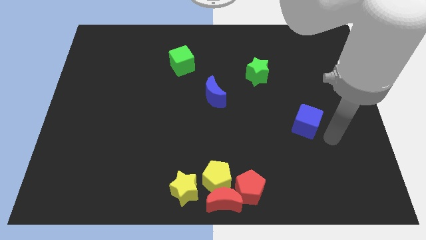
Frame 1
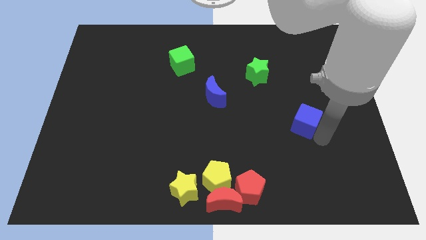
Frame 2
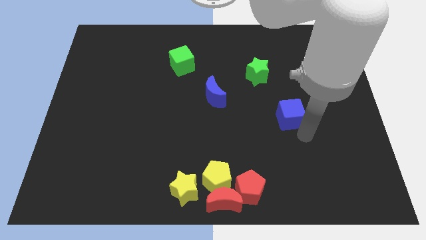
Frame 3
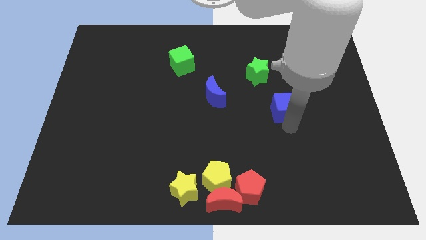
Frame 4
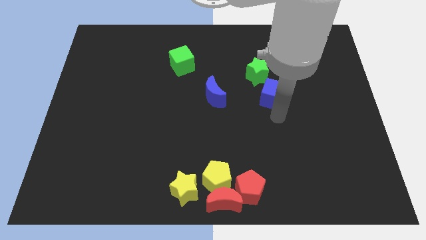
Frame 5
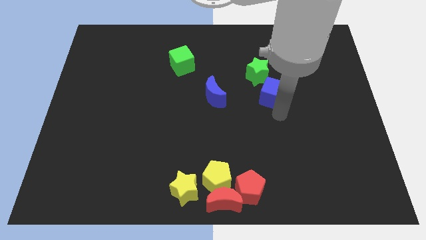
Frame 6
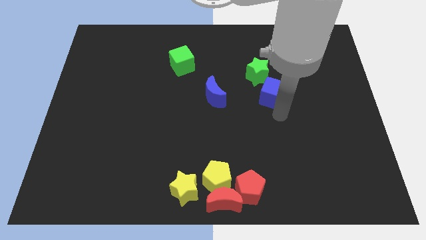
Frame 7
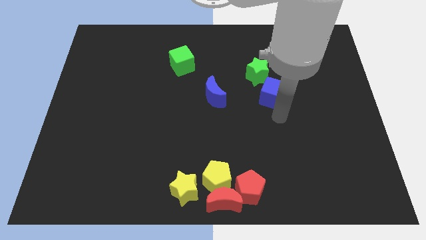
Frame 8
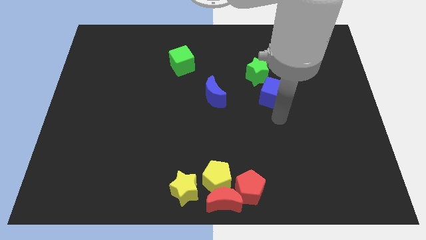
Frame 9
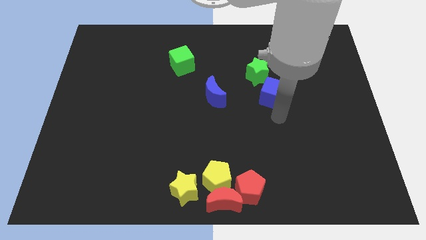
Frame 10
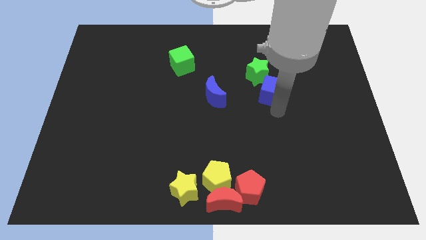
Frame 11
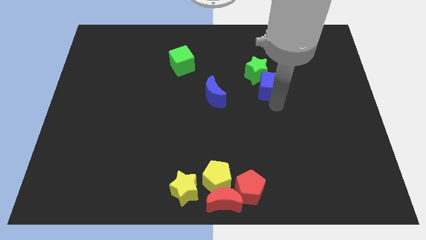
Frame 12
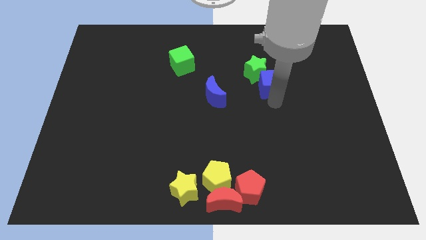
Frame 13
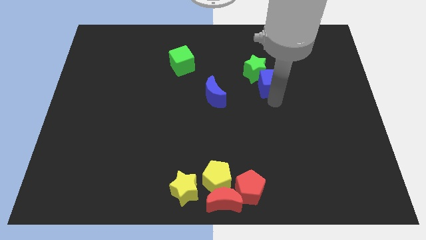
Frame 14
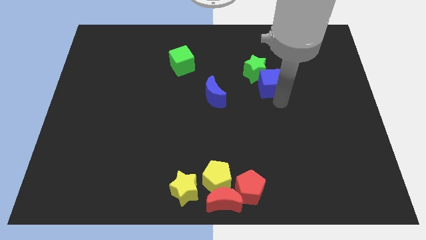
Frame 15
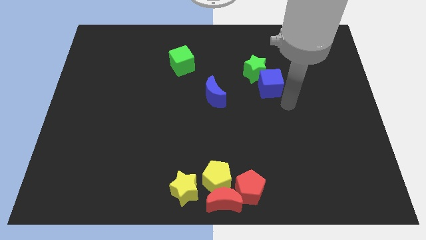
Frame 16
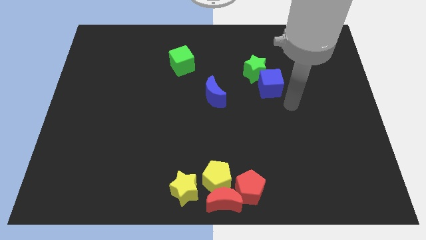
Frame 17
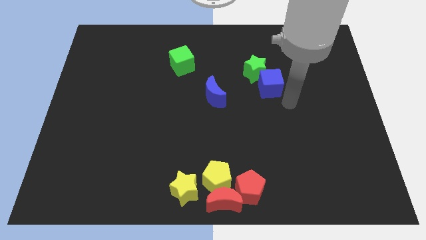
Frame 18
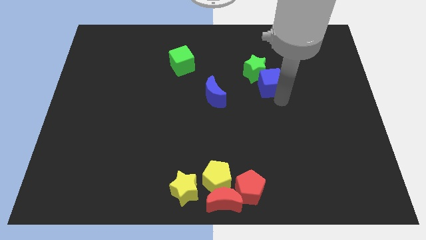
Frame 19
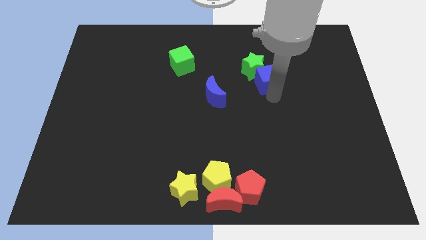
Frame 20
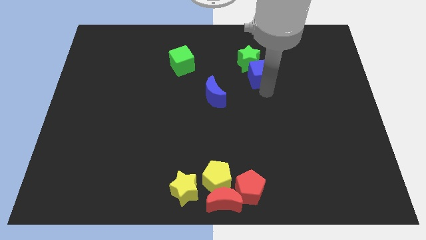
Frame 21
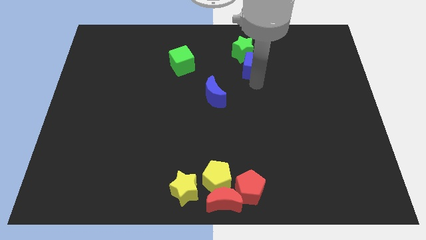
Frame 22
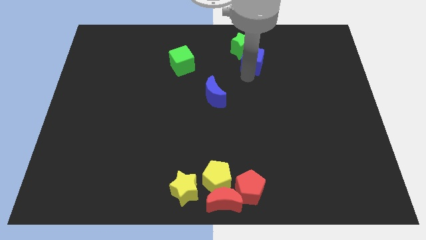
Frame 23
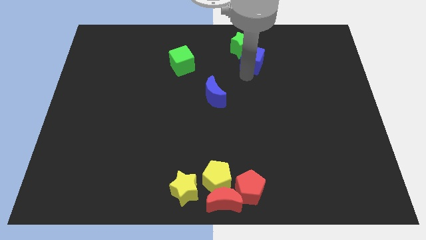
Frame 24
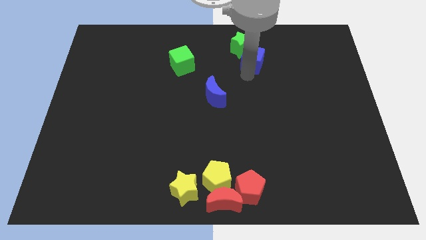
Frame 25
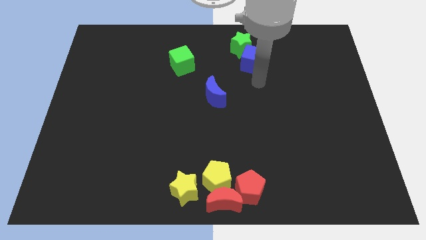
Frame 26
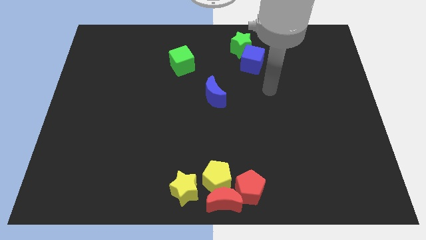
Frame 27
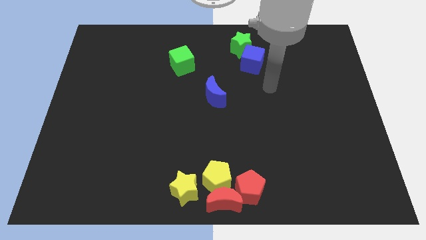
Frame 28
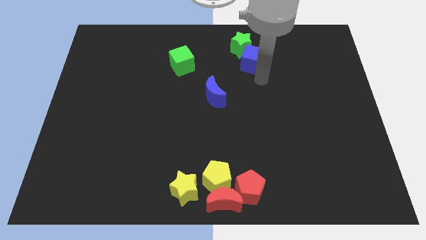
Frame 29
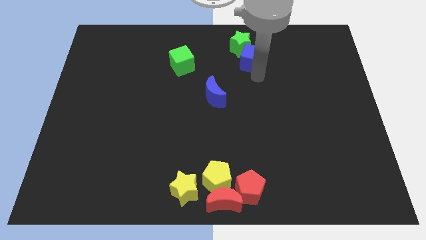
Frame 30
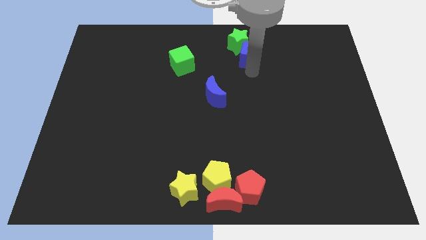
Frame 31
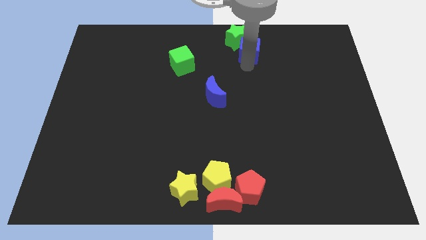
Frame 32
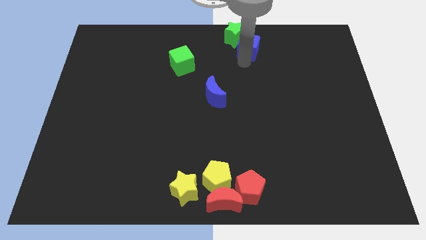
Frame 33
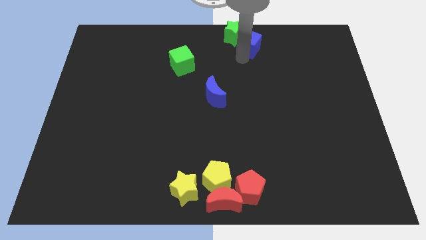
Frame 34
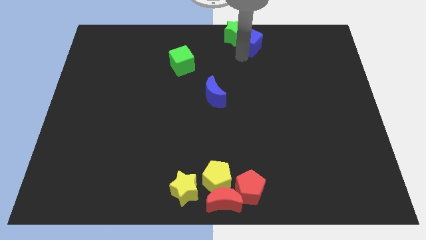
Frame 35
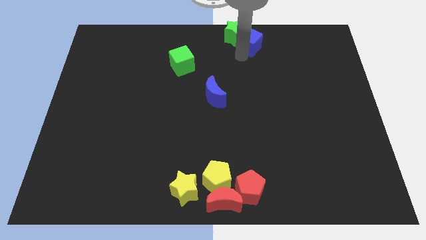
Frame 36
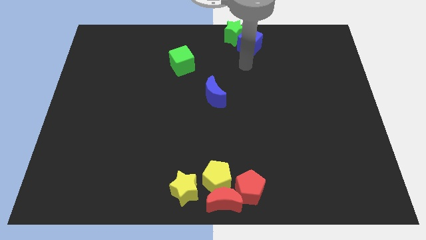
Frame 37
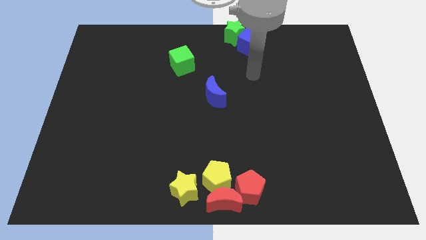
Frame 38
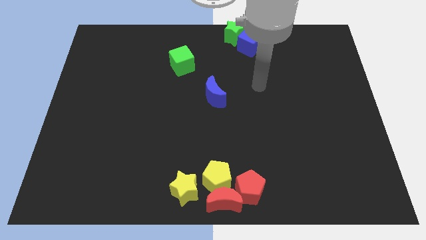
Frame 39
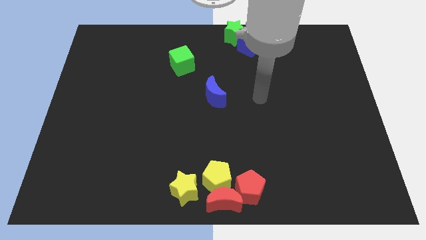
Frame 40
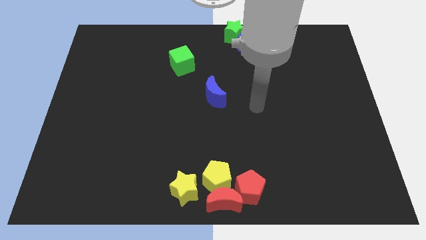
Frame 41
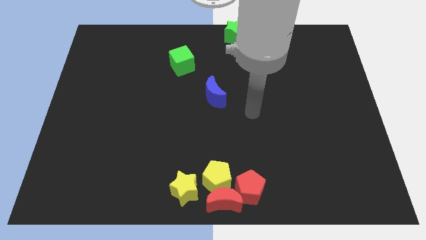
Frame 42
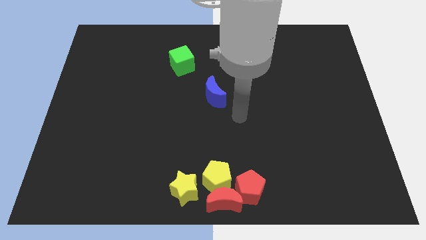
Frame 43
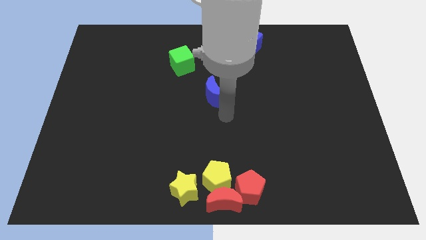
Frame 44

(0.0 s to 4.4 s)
push the blue cube into the green star towards the top center of the board

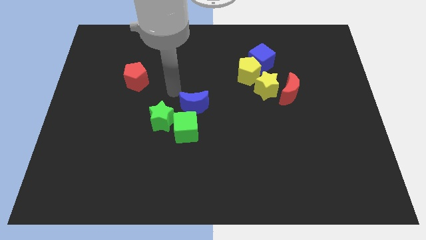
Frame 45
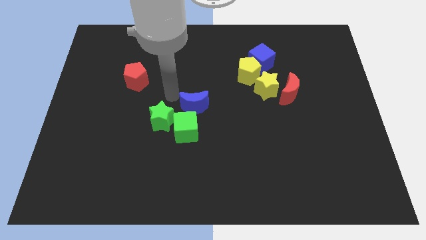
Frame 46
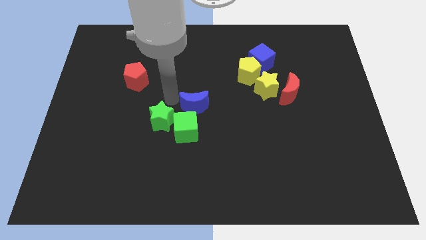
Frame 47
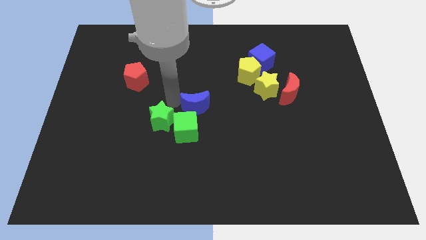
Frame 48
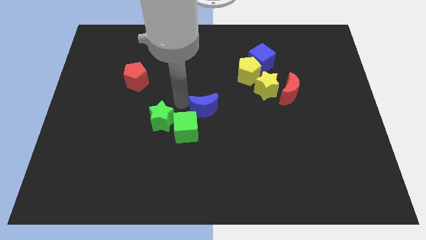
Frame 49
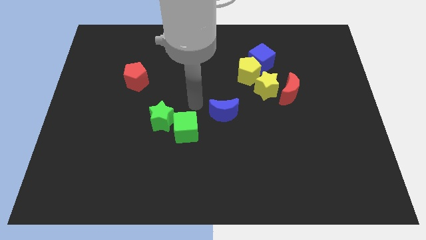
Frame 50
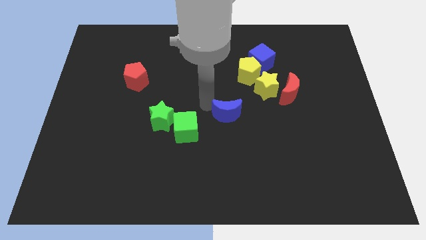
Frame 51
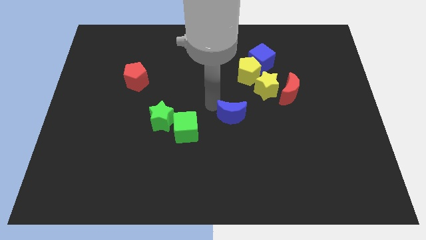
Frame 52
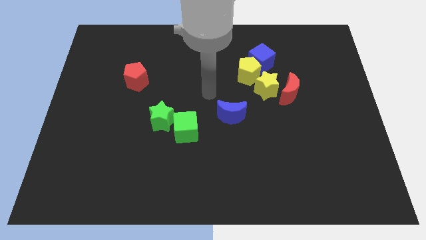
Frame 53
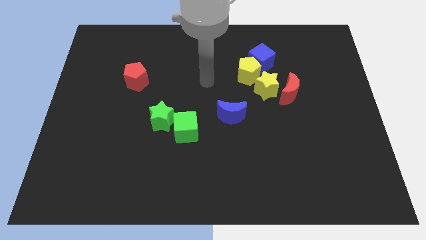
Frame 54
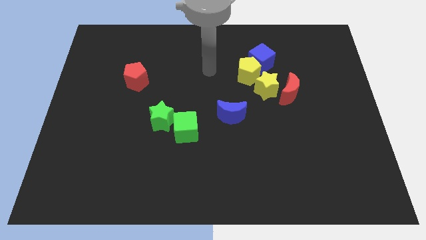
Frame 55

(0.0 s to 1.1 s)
push the blue moon to the center

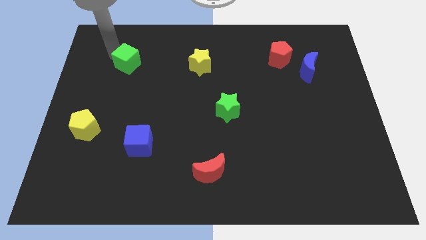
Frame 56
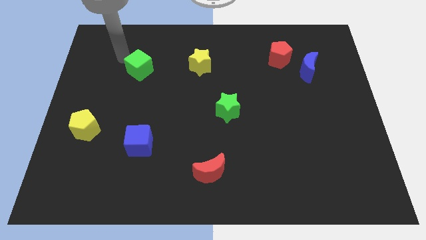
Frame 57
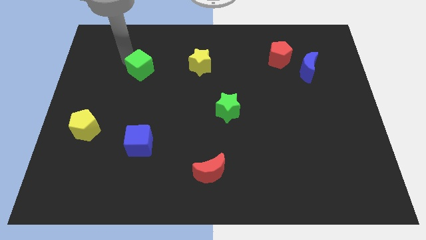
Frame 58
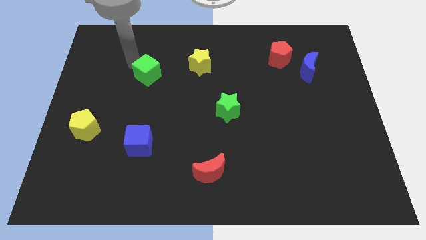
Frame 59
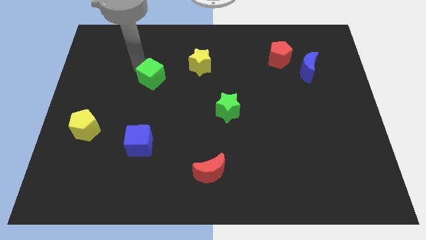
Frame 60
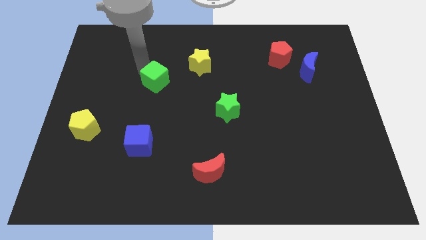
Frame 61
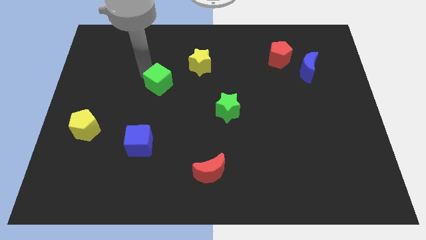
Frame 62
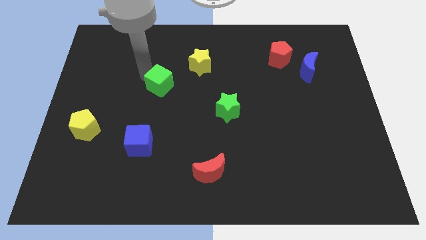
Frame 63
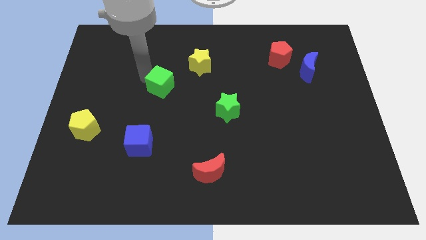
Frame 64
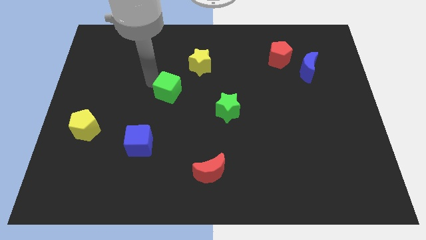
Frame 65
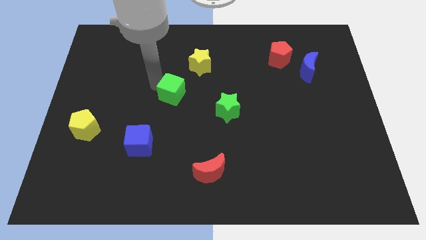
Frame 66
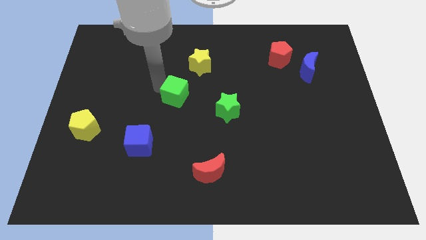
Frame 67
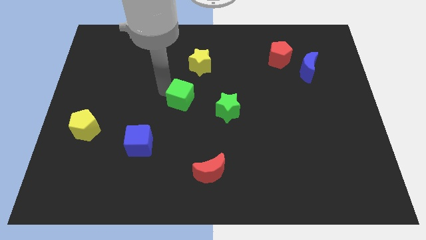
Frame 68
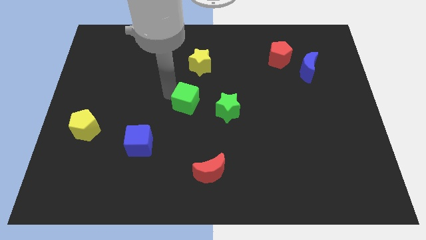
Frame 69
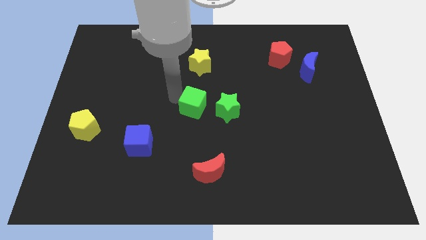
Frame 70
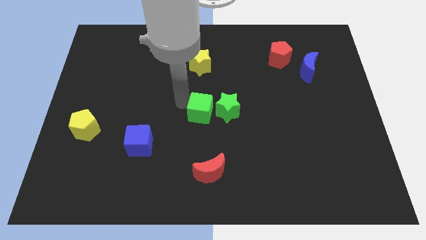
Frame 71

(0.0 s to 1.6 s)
drag the green cube and place it close to the green star

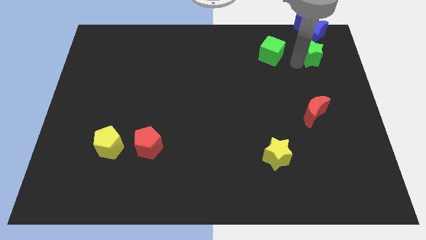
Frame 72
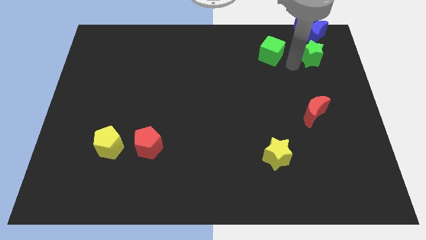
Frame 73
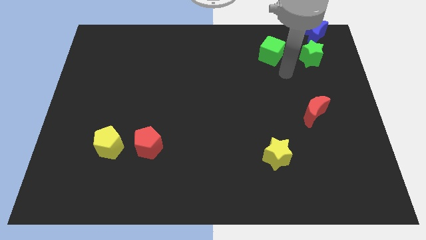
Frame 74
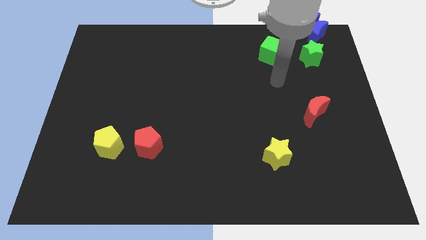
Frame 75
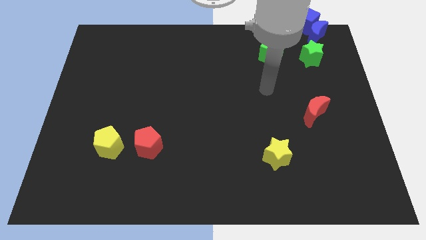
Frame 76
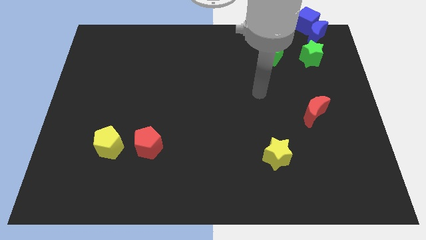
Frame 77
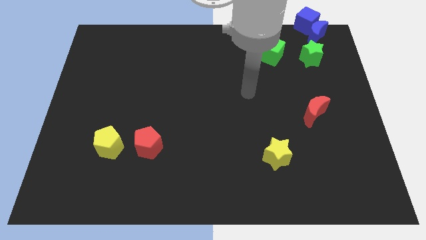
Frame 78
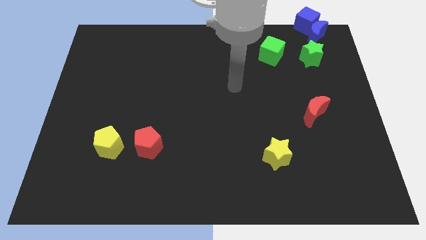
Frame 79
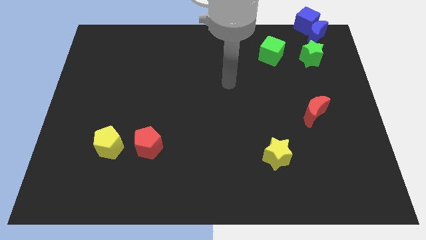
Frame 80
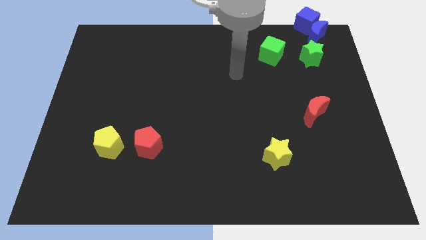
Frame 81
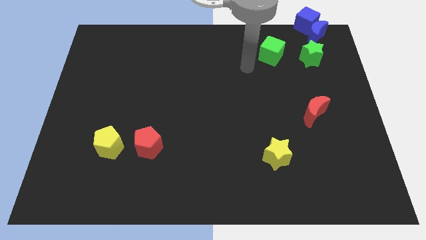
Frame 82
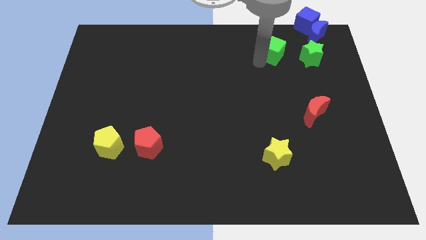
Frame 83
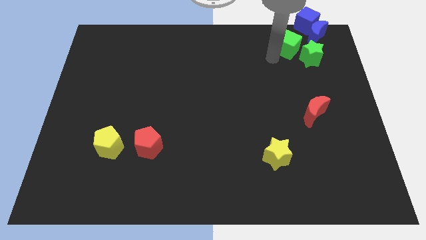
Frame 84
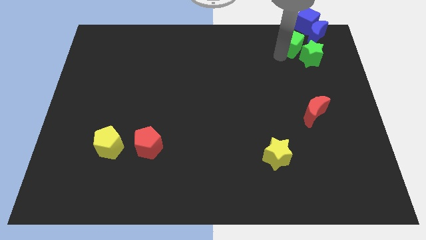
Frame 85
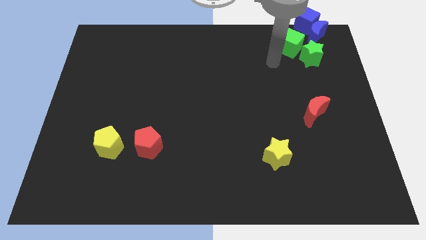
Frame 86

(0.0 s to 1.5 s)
push the green cube towards the blue blocks

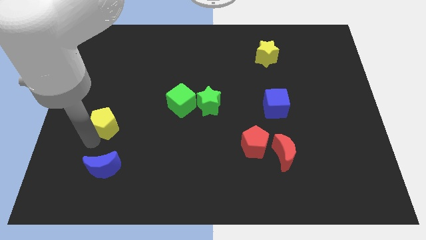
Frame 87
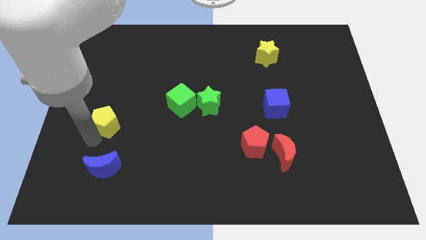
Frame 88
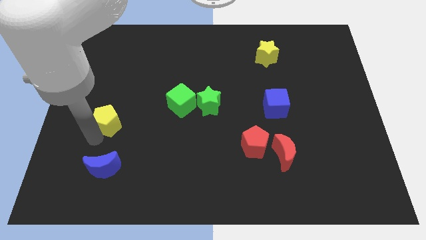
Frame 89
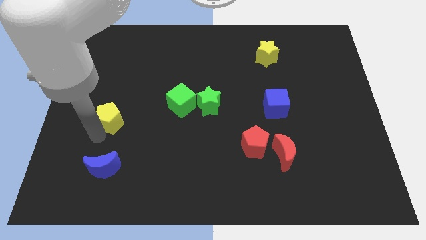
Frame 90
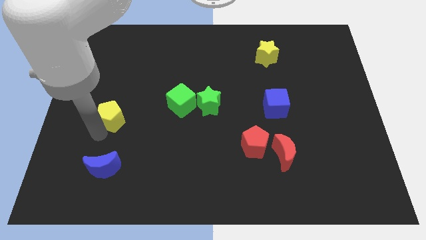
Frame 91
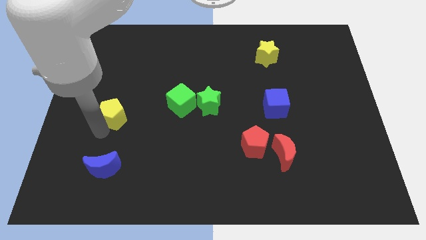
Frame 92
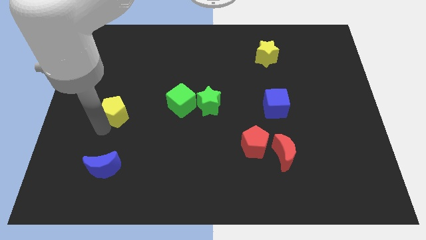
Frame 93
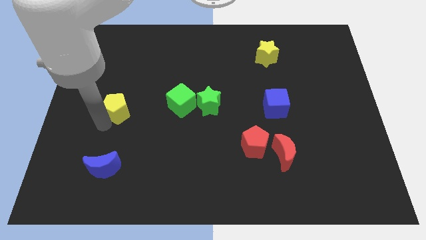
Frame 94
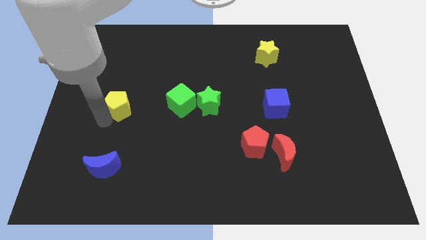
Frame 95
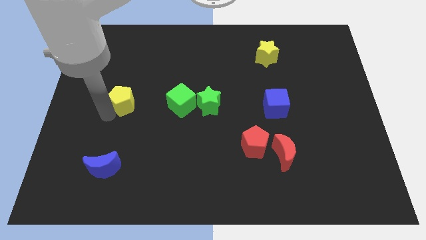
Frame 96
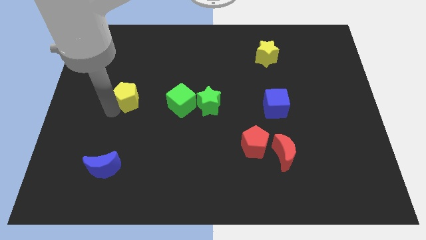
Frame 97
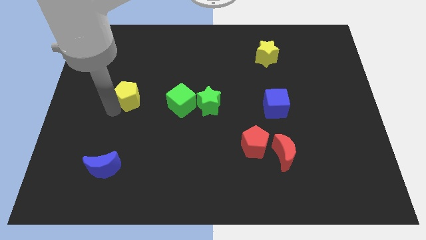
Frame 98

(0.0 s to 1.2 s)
place the yellow pentagon to the left to the green cube
